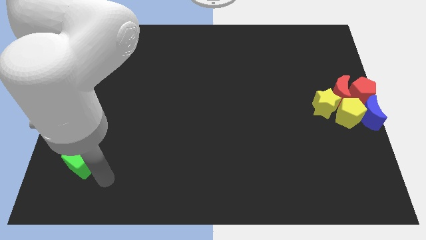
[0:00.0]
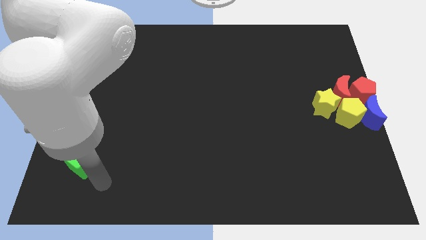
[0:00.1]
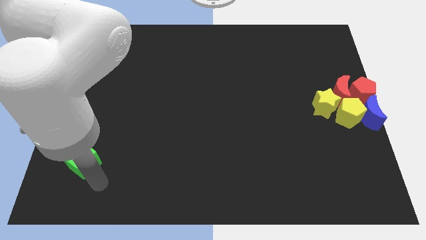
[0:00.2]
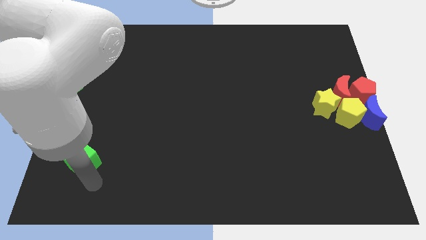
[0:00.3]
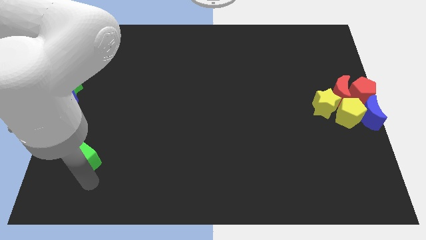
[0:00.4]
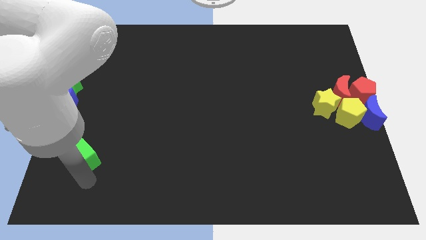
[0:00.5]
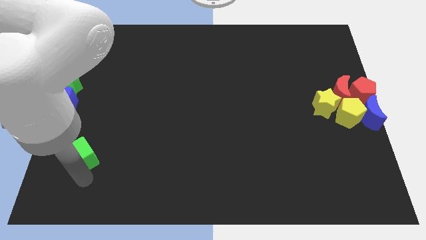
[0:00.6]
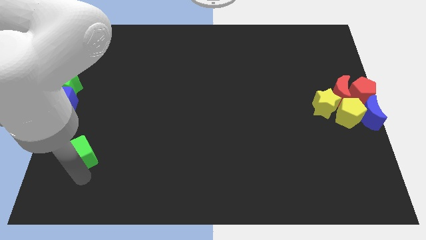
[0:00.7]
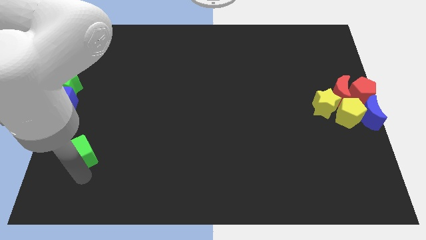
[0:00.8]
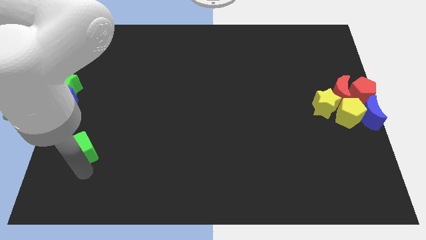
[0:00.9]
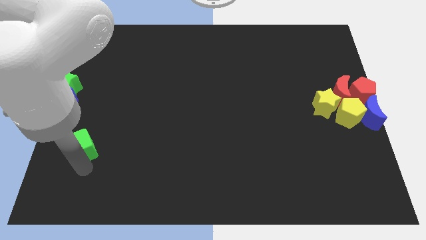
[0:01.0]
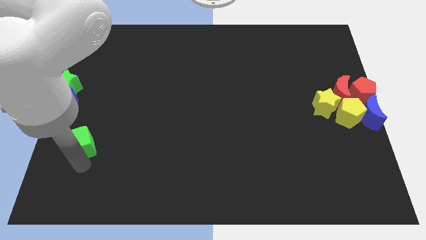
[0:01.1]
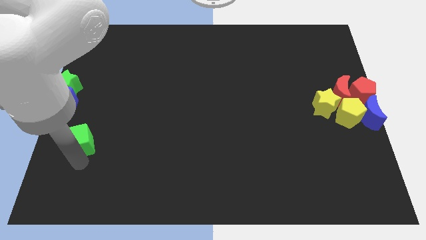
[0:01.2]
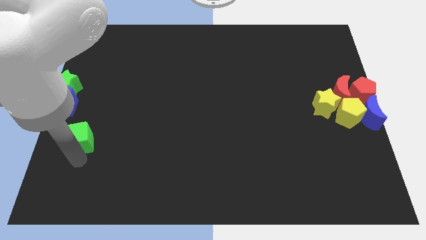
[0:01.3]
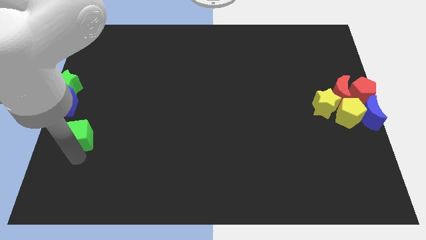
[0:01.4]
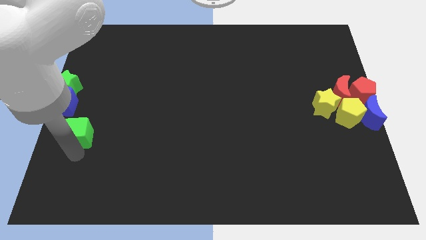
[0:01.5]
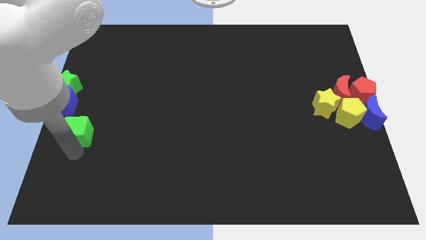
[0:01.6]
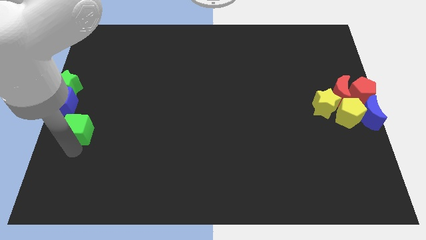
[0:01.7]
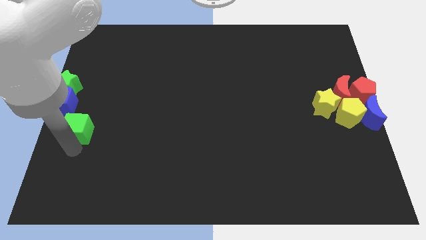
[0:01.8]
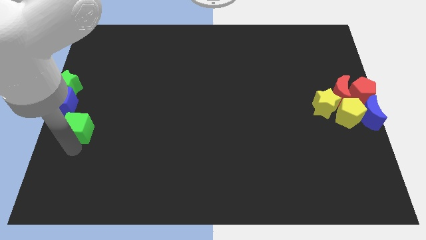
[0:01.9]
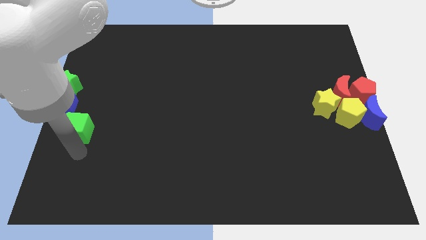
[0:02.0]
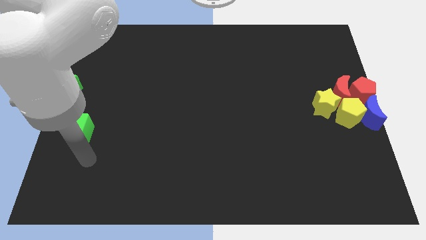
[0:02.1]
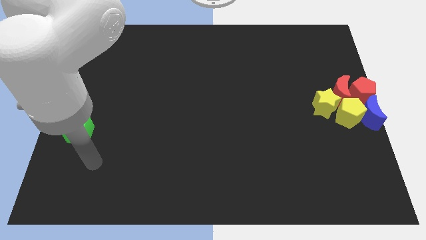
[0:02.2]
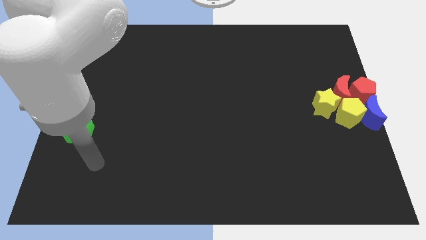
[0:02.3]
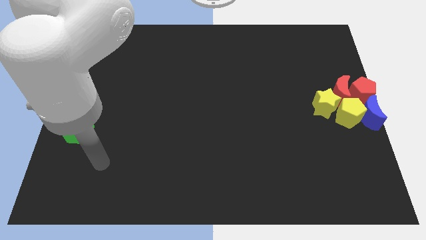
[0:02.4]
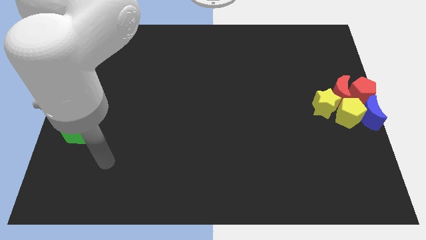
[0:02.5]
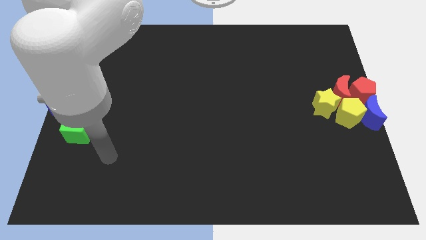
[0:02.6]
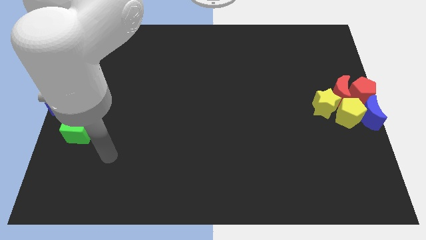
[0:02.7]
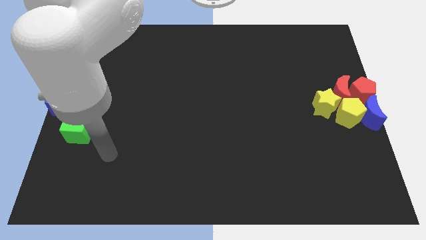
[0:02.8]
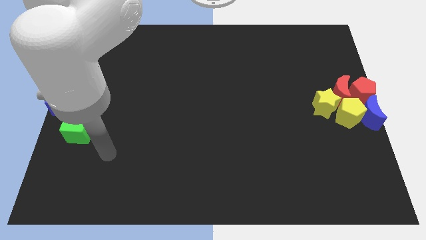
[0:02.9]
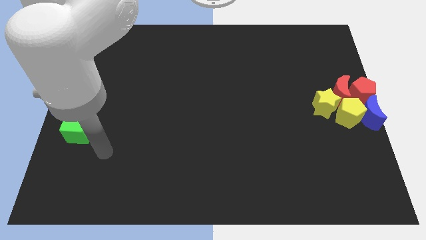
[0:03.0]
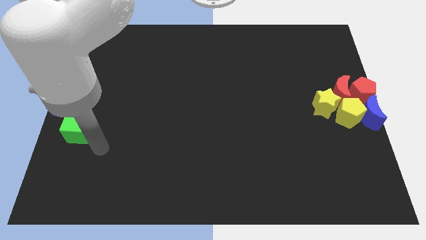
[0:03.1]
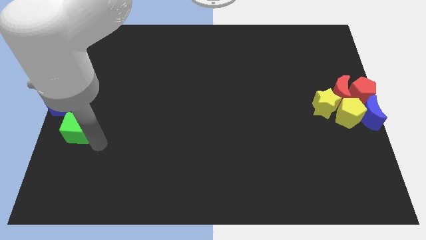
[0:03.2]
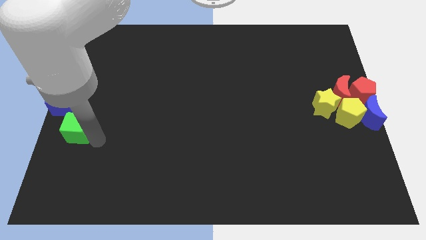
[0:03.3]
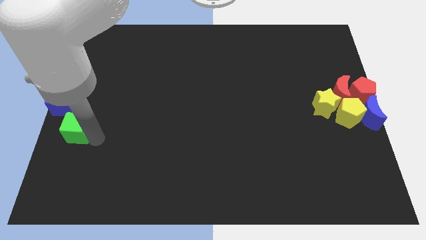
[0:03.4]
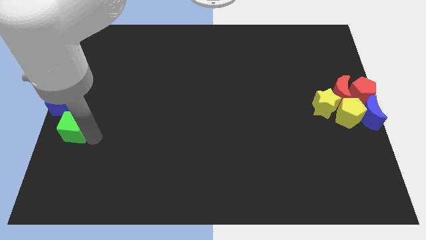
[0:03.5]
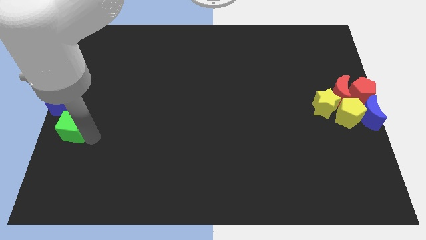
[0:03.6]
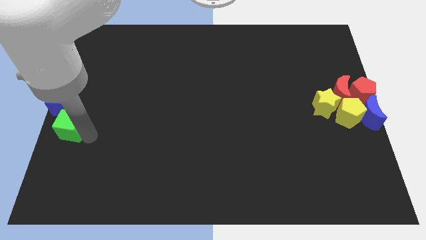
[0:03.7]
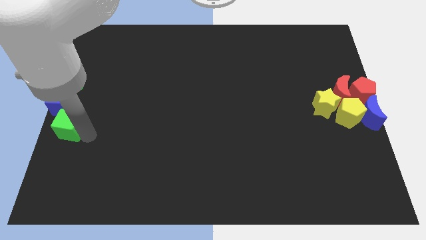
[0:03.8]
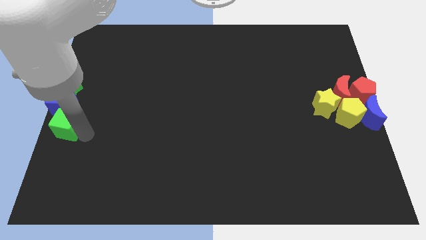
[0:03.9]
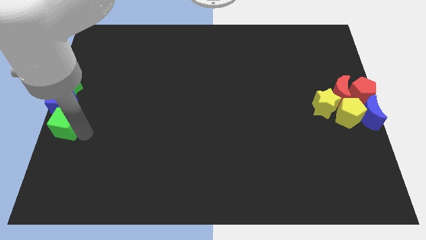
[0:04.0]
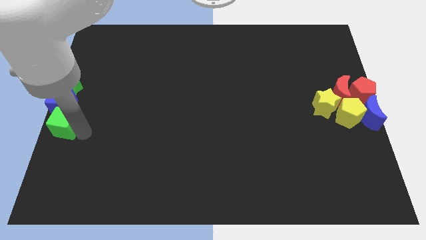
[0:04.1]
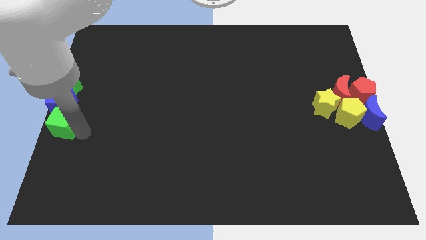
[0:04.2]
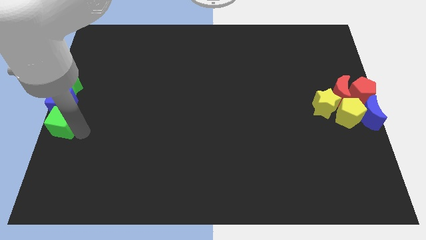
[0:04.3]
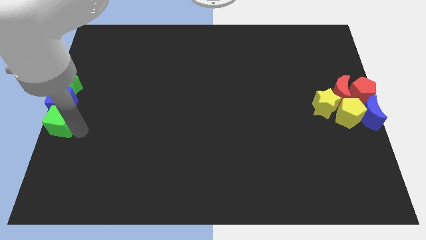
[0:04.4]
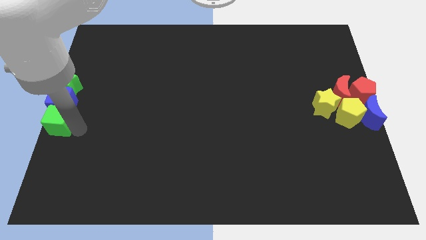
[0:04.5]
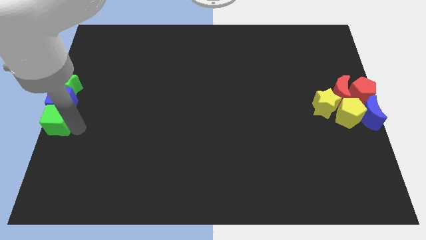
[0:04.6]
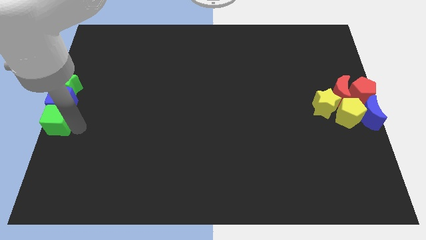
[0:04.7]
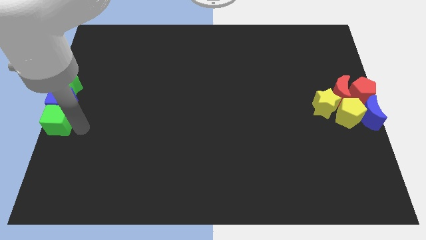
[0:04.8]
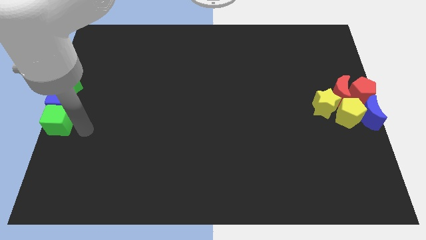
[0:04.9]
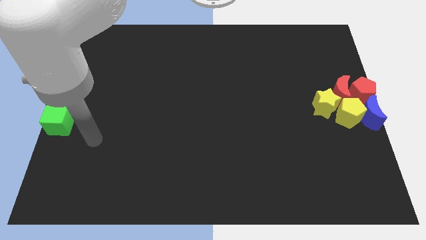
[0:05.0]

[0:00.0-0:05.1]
push the green cube to the bottom of the blue cube

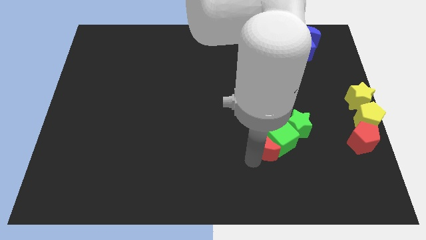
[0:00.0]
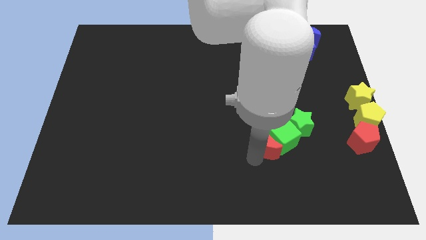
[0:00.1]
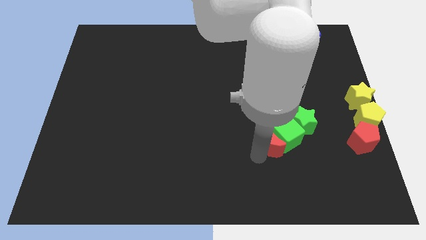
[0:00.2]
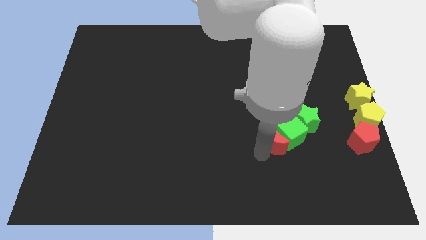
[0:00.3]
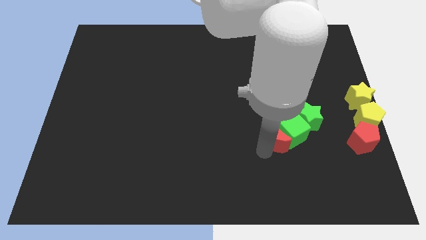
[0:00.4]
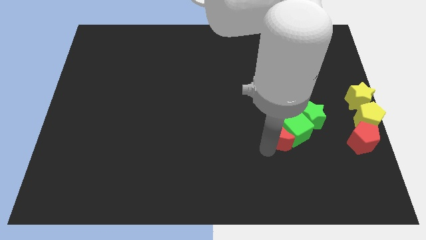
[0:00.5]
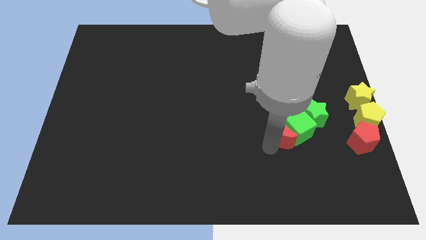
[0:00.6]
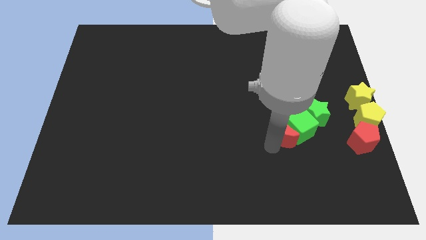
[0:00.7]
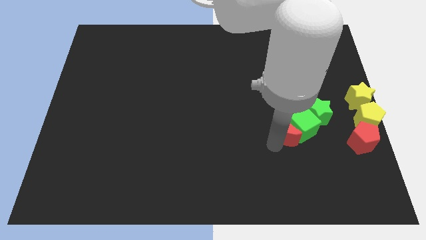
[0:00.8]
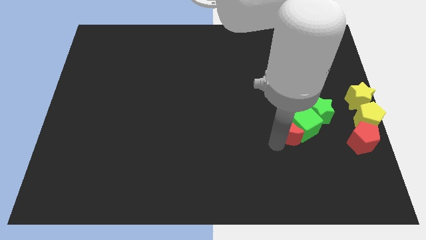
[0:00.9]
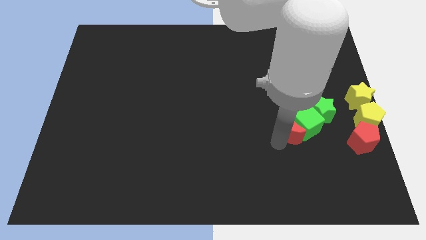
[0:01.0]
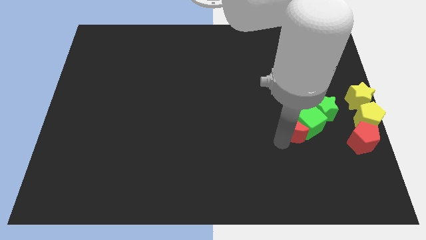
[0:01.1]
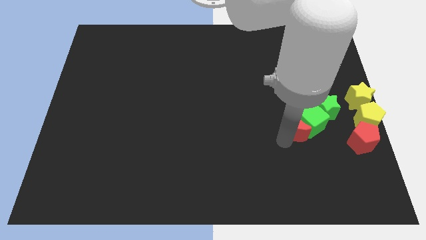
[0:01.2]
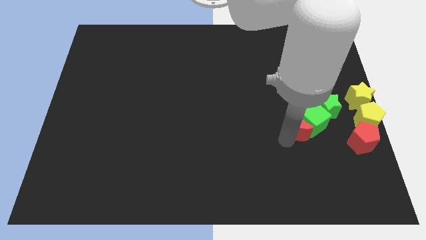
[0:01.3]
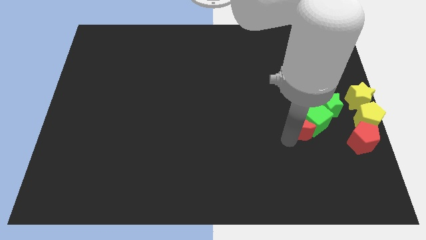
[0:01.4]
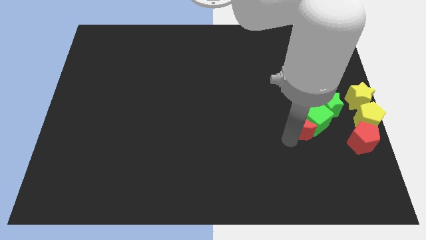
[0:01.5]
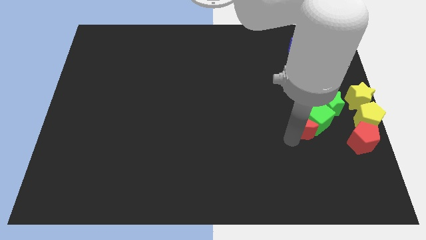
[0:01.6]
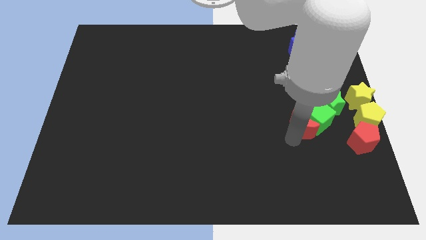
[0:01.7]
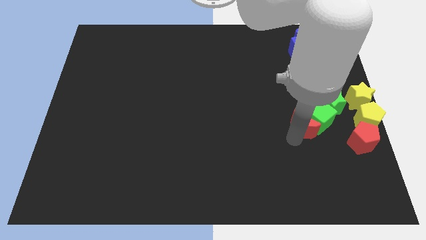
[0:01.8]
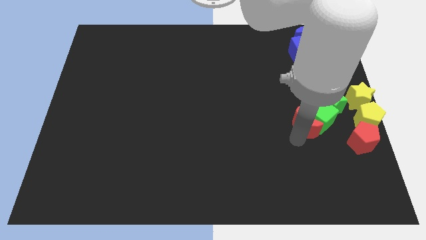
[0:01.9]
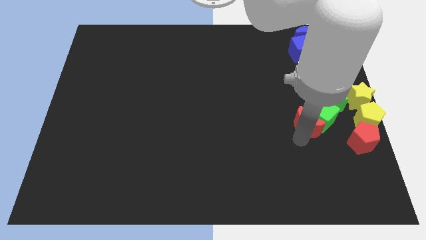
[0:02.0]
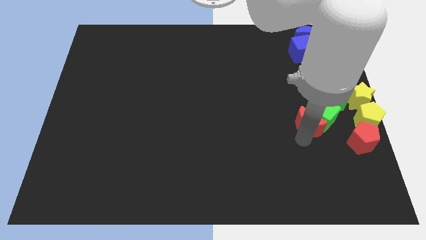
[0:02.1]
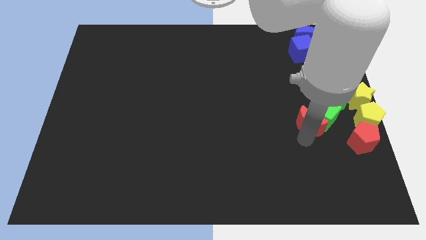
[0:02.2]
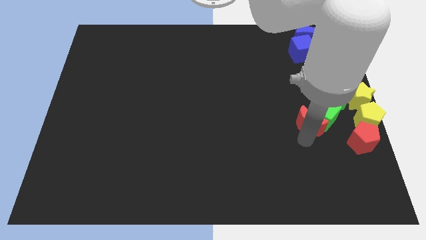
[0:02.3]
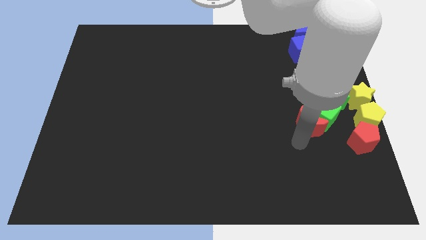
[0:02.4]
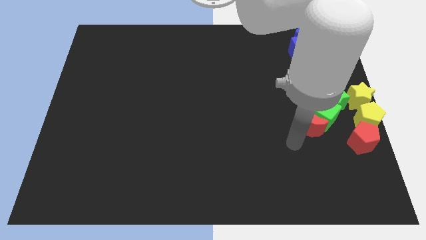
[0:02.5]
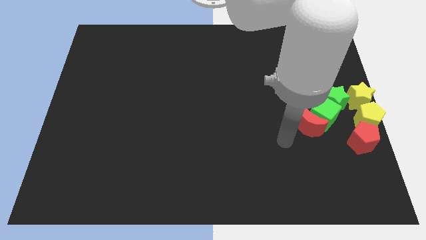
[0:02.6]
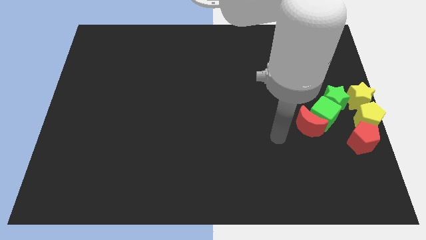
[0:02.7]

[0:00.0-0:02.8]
move the green blocks red moon towards the left side of yellow blocks red pentagon

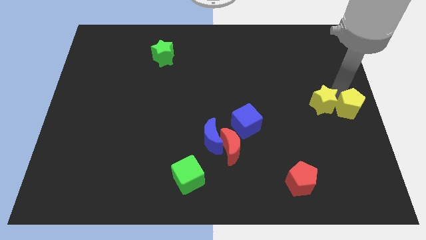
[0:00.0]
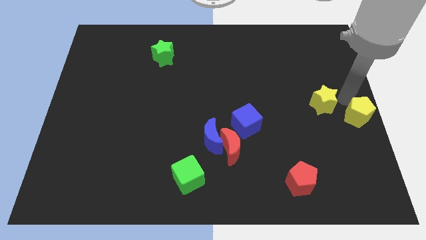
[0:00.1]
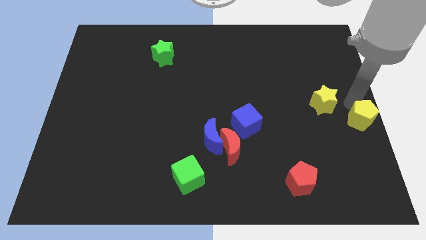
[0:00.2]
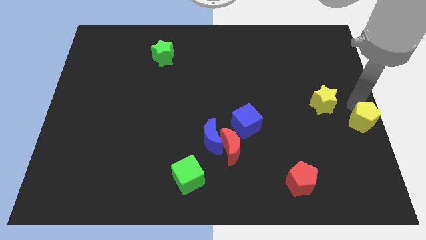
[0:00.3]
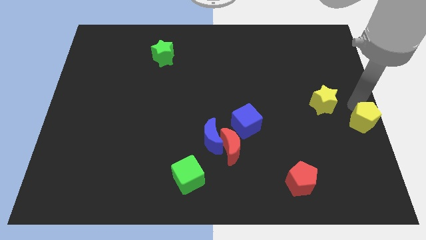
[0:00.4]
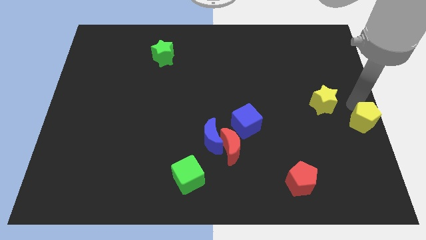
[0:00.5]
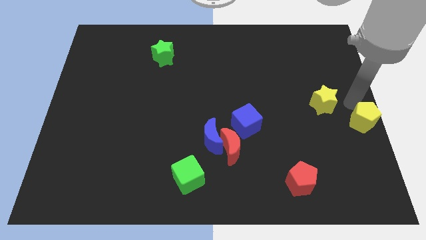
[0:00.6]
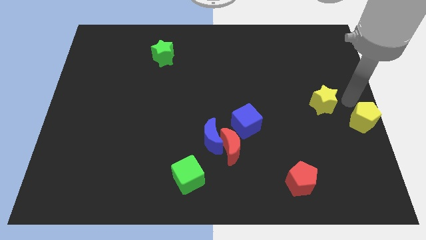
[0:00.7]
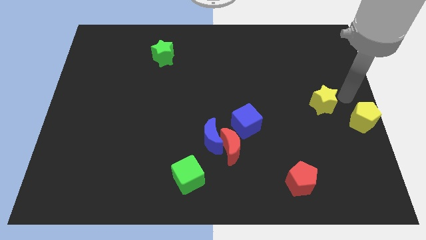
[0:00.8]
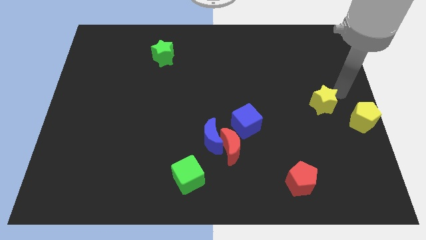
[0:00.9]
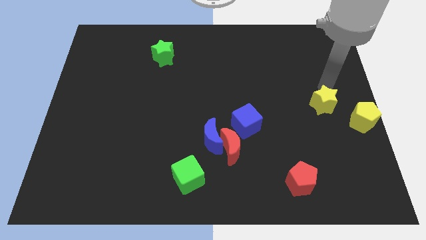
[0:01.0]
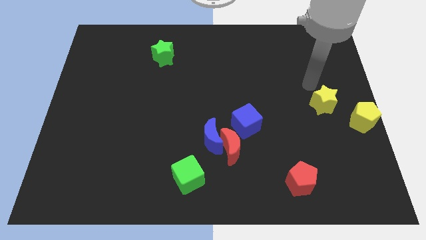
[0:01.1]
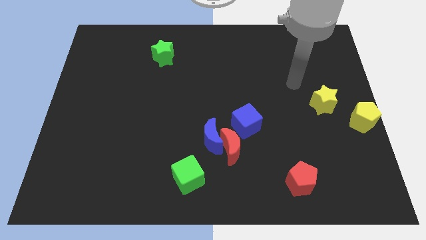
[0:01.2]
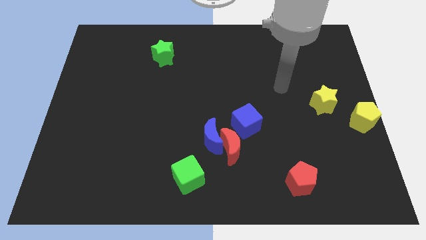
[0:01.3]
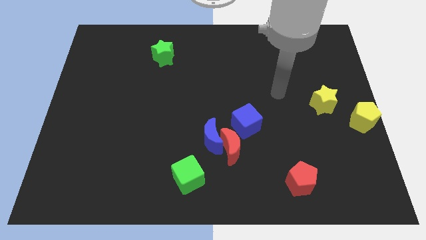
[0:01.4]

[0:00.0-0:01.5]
separate the yellow pentagon from the yellow star
